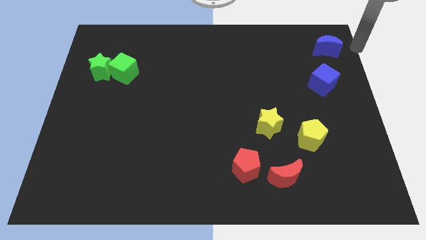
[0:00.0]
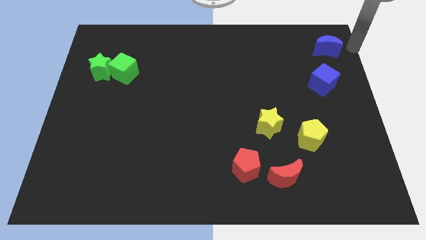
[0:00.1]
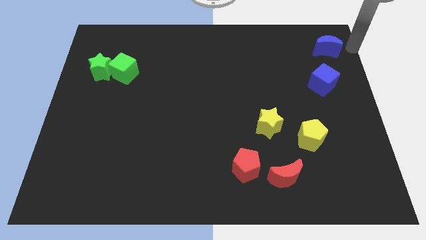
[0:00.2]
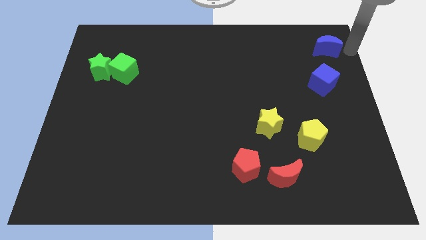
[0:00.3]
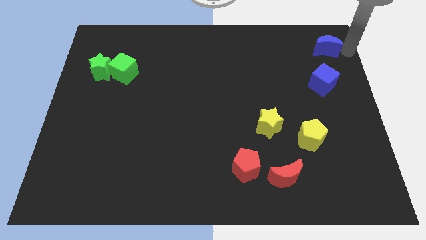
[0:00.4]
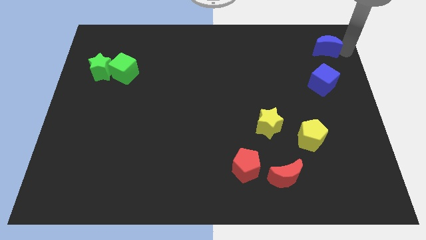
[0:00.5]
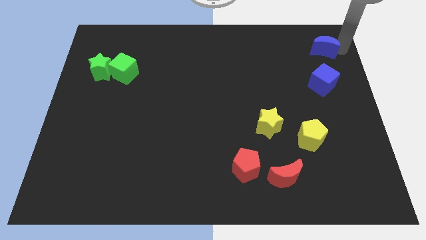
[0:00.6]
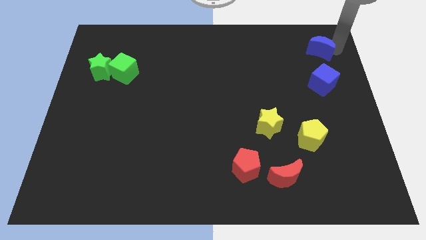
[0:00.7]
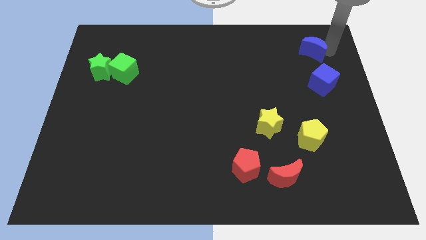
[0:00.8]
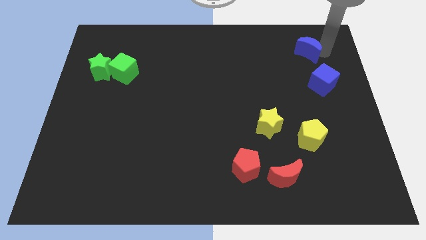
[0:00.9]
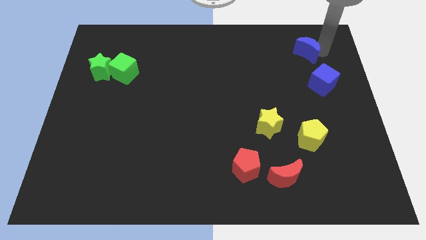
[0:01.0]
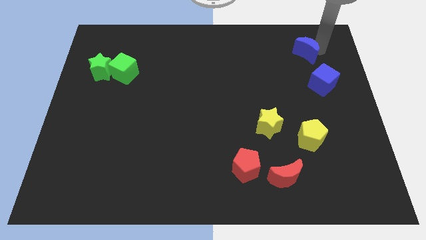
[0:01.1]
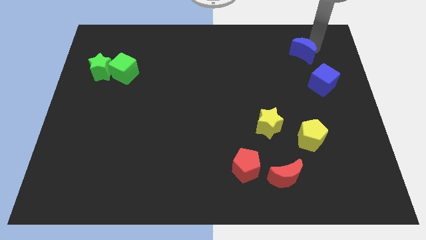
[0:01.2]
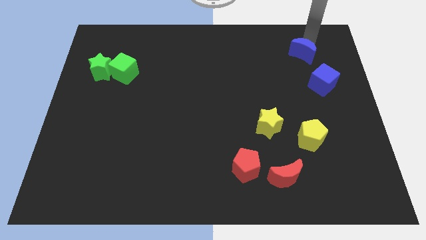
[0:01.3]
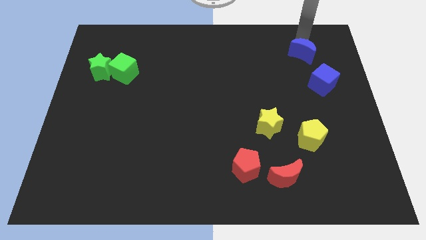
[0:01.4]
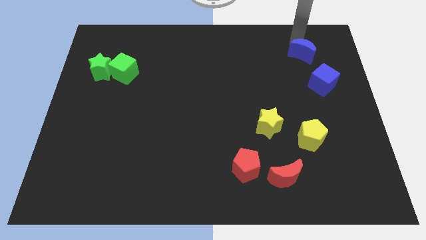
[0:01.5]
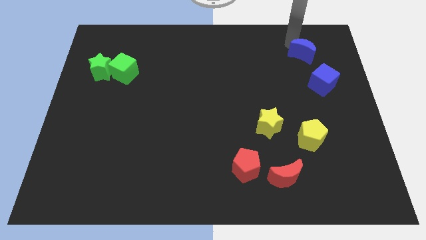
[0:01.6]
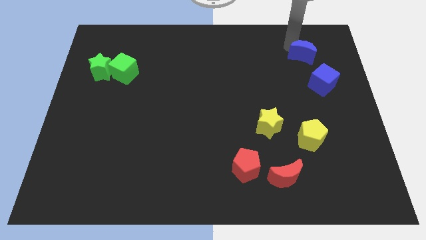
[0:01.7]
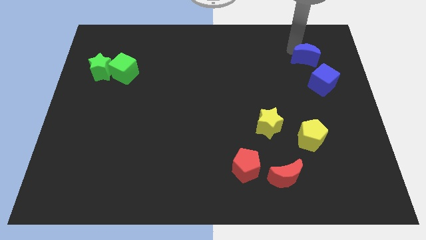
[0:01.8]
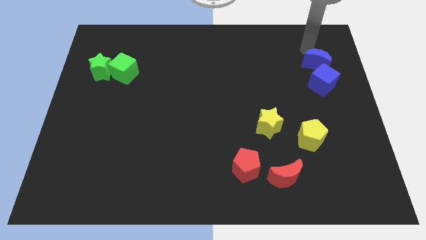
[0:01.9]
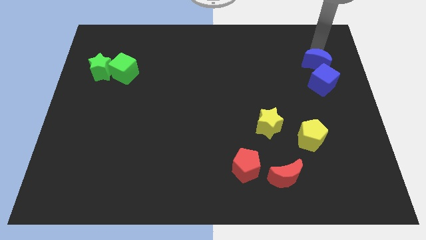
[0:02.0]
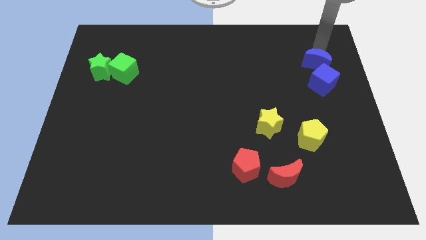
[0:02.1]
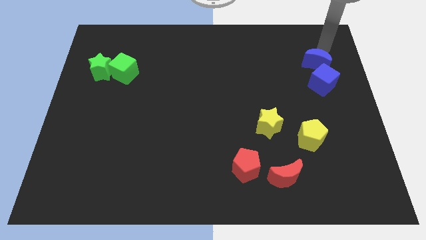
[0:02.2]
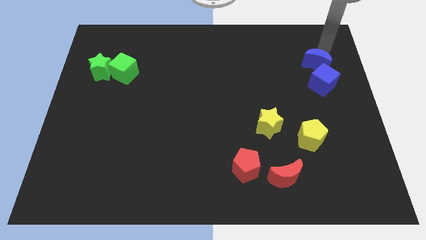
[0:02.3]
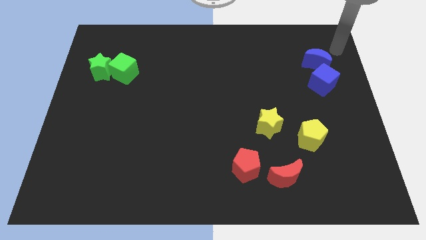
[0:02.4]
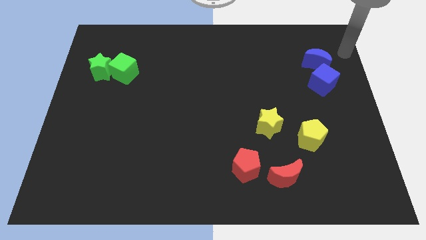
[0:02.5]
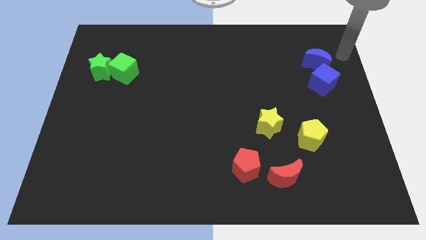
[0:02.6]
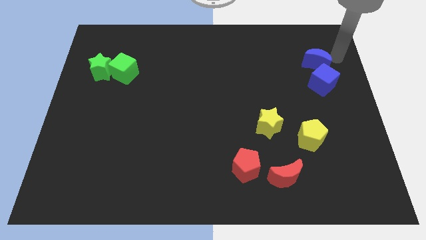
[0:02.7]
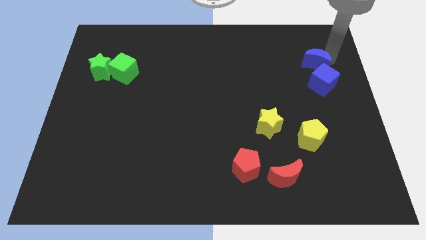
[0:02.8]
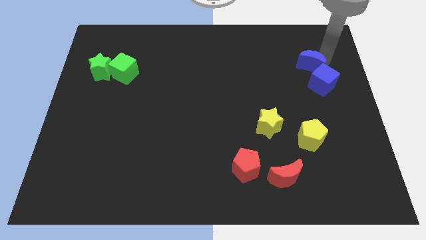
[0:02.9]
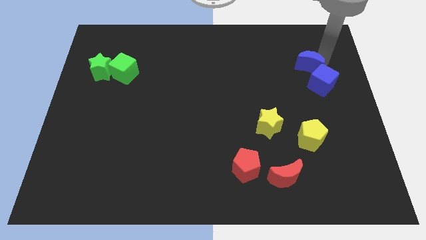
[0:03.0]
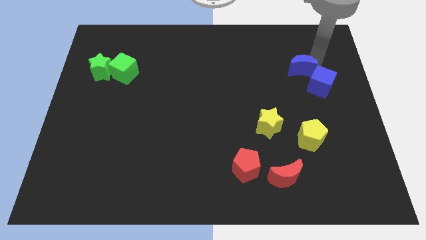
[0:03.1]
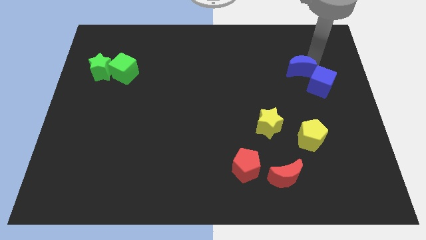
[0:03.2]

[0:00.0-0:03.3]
move the blue moon into blue cube

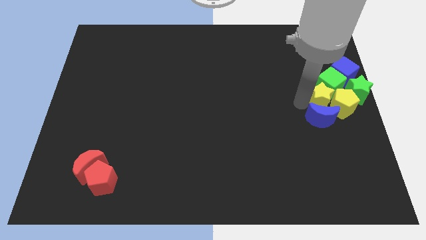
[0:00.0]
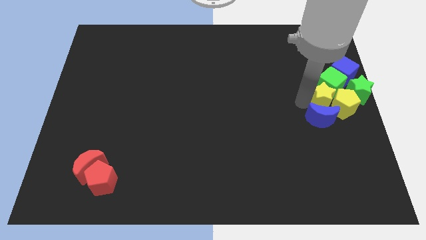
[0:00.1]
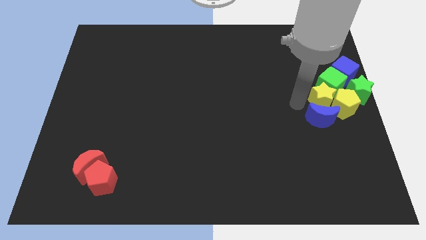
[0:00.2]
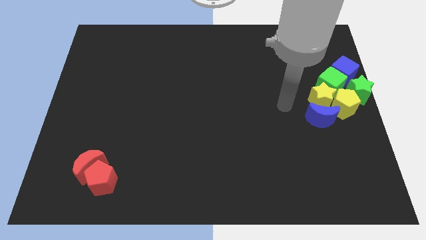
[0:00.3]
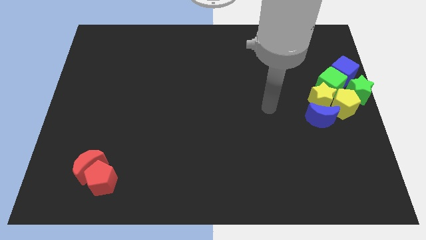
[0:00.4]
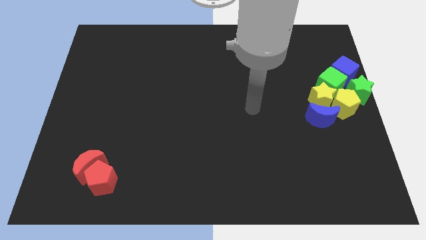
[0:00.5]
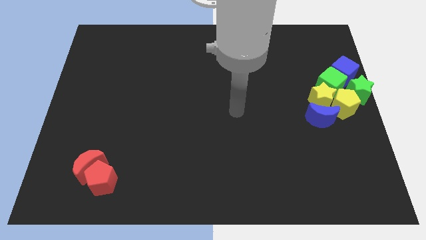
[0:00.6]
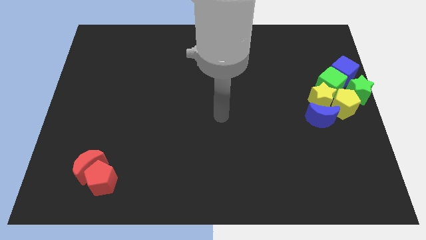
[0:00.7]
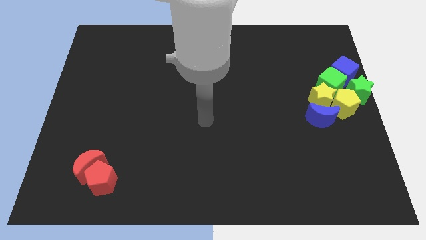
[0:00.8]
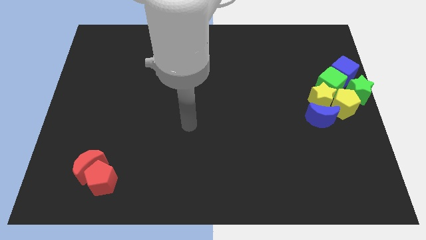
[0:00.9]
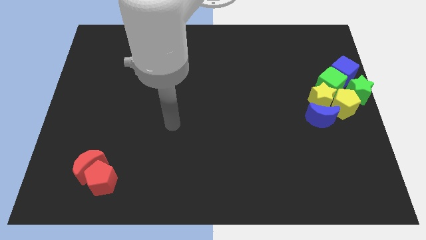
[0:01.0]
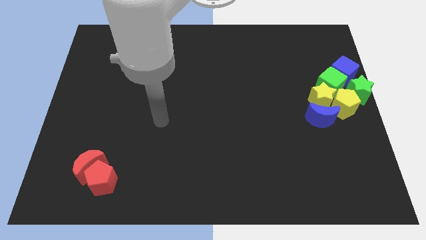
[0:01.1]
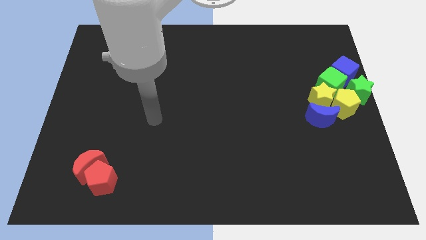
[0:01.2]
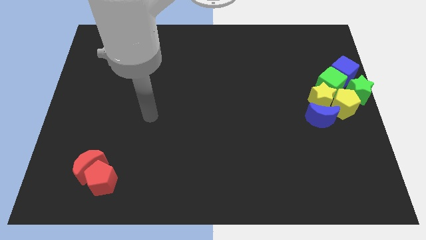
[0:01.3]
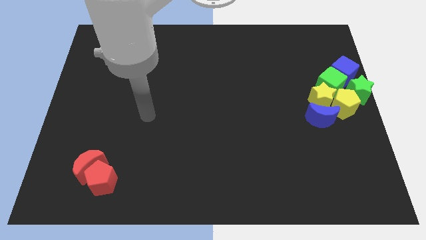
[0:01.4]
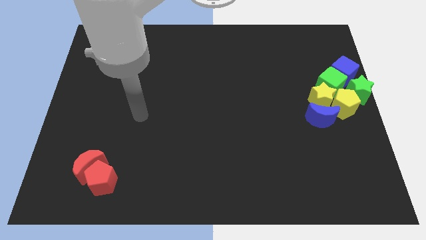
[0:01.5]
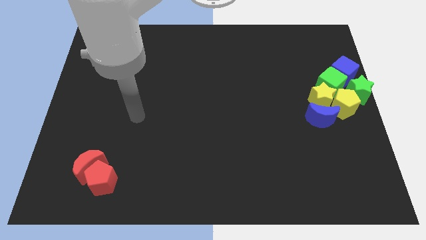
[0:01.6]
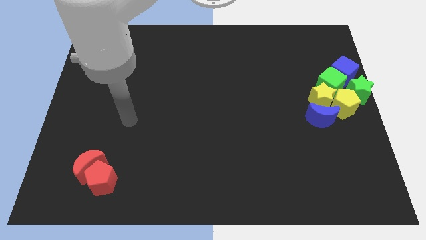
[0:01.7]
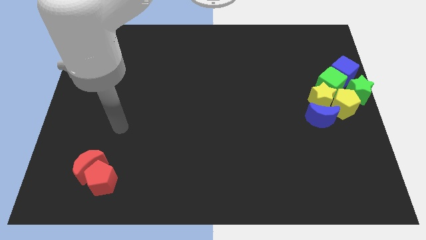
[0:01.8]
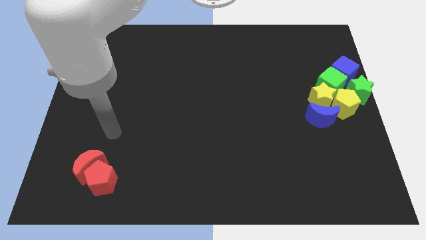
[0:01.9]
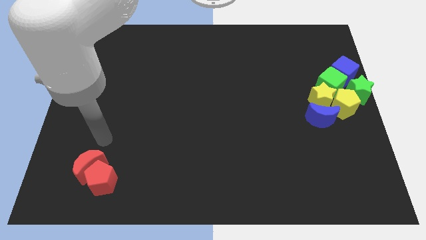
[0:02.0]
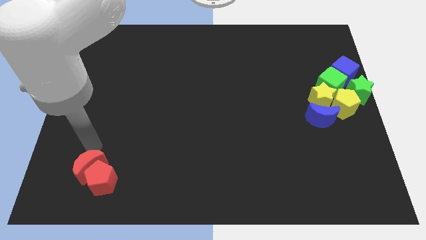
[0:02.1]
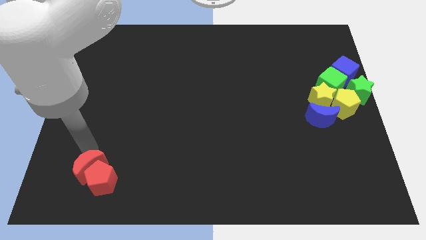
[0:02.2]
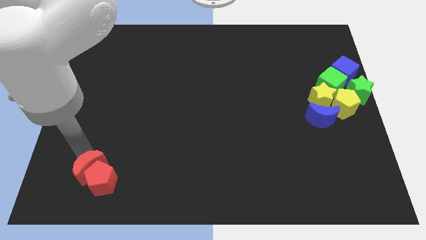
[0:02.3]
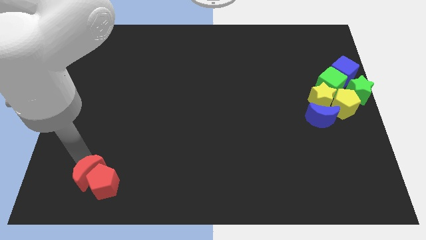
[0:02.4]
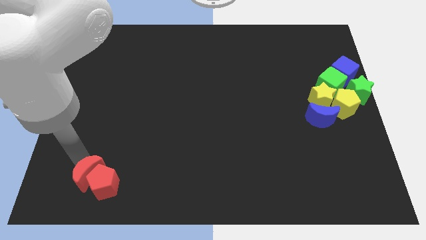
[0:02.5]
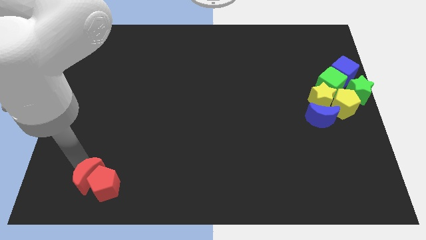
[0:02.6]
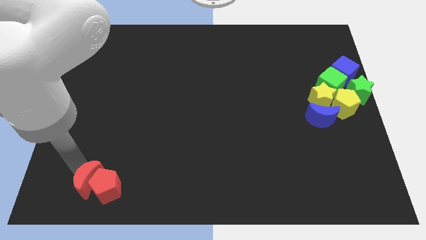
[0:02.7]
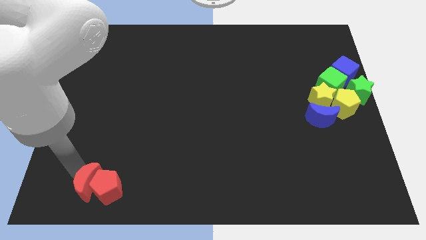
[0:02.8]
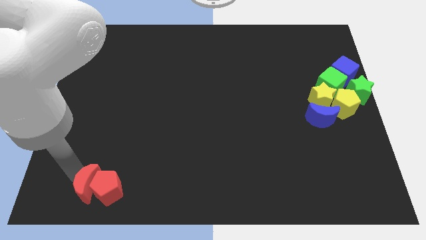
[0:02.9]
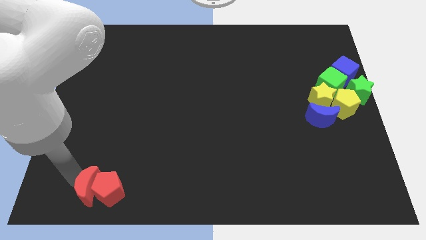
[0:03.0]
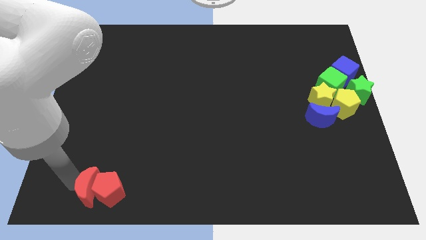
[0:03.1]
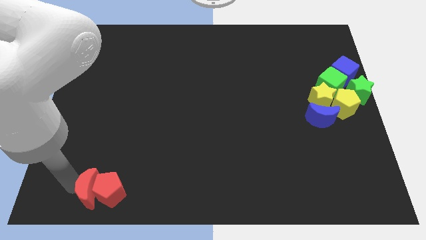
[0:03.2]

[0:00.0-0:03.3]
move the arm away from the yellow star

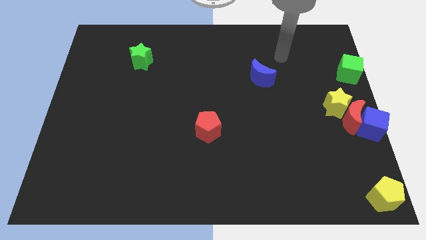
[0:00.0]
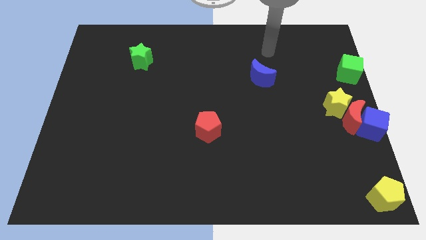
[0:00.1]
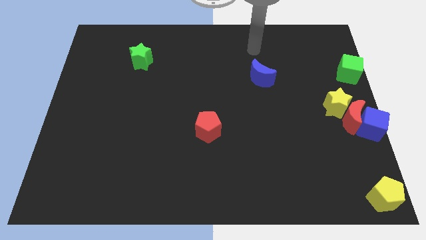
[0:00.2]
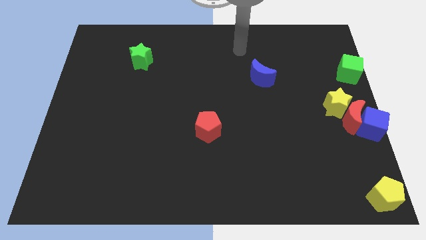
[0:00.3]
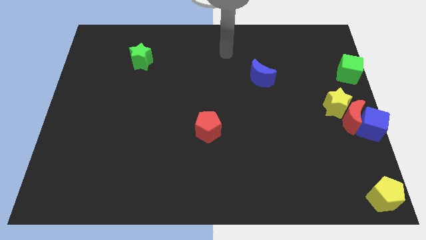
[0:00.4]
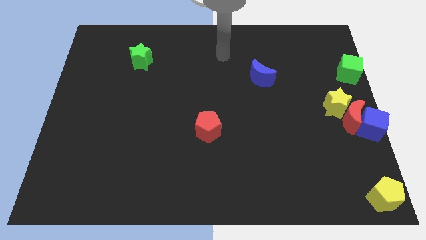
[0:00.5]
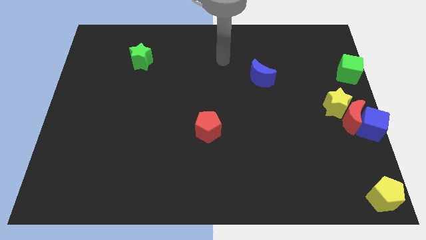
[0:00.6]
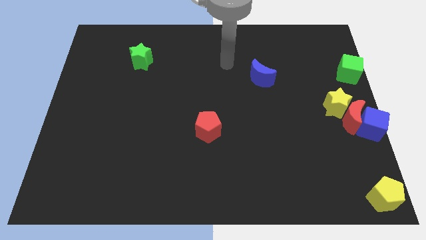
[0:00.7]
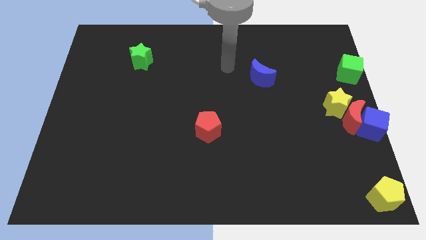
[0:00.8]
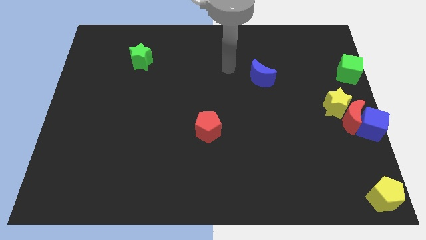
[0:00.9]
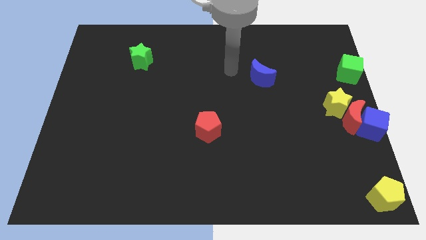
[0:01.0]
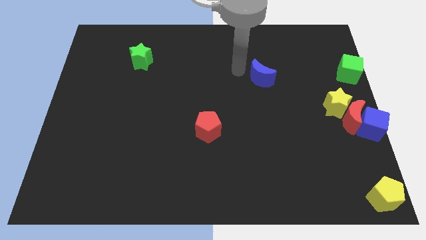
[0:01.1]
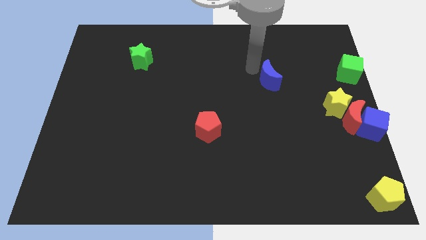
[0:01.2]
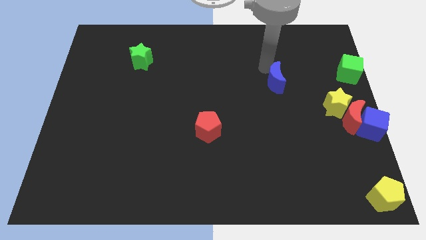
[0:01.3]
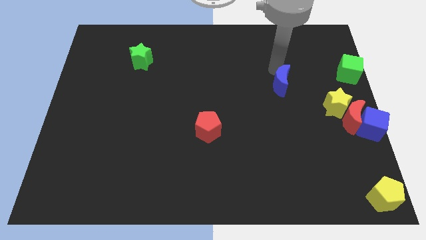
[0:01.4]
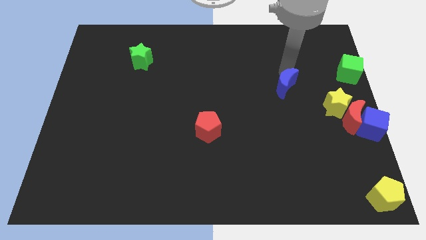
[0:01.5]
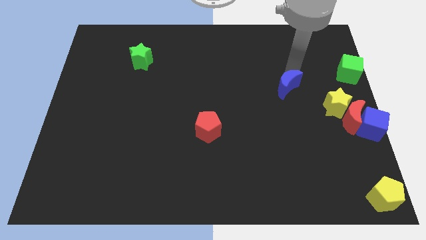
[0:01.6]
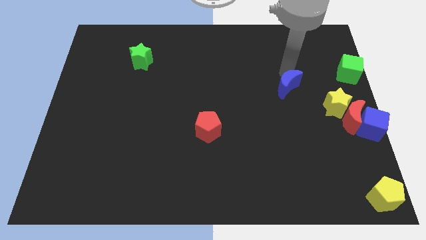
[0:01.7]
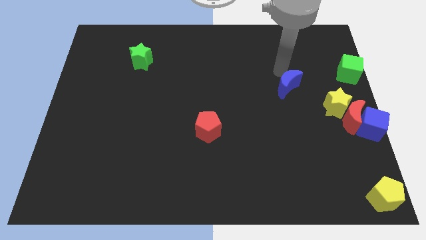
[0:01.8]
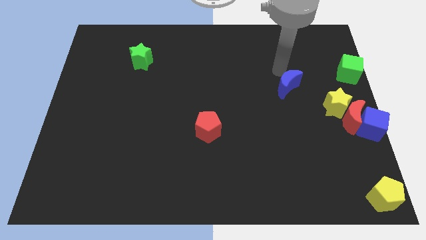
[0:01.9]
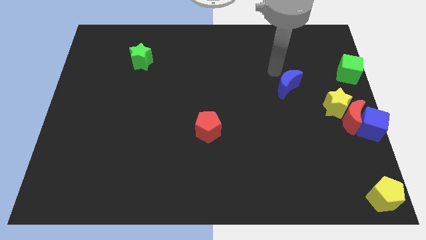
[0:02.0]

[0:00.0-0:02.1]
move the blue moon towards the yellow star

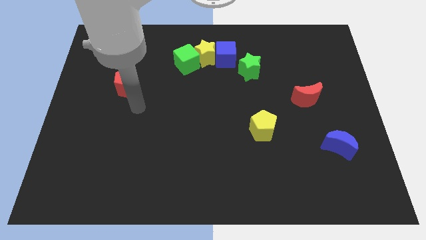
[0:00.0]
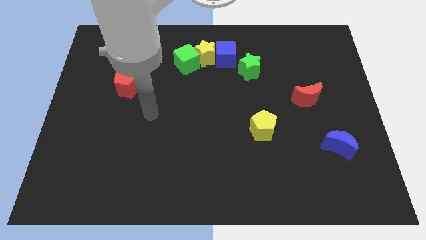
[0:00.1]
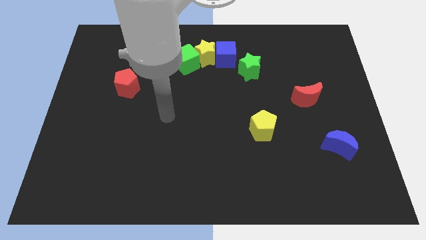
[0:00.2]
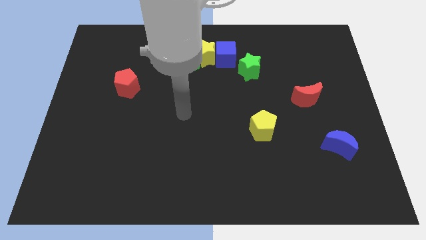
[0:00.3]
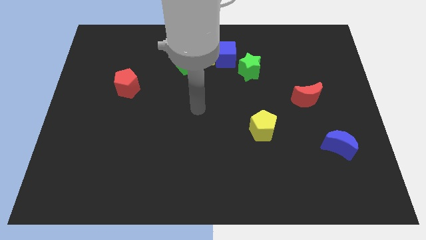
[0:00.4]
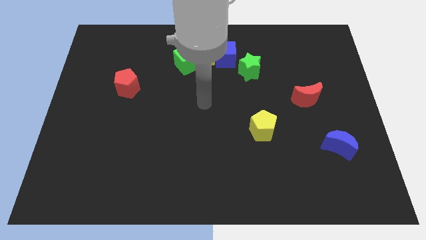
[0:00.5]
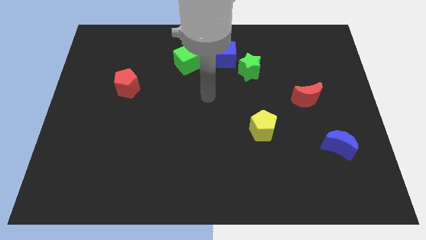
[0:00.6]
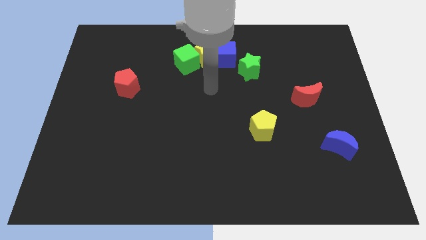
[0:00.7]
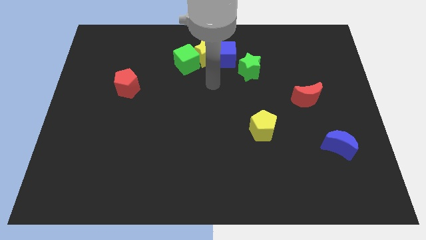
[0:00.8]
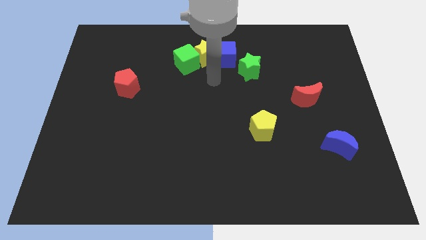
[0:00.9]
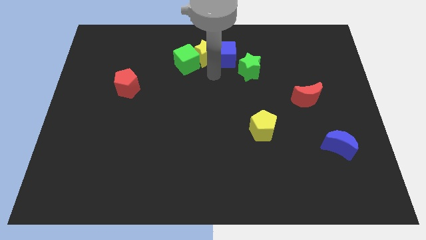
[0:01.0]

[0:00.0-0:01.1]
move your hand below the yellow star
